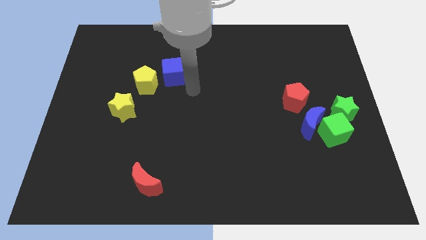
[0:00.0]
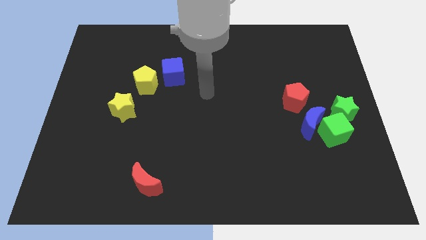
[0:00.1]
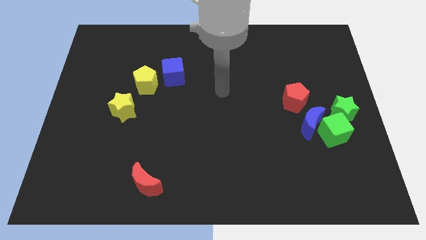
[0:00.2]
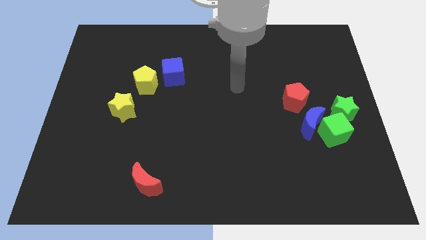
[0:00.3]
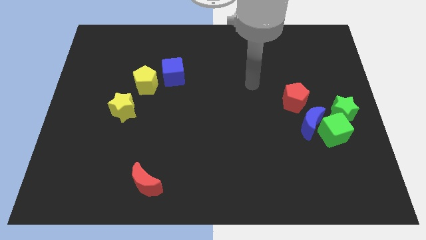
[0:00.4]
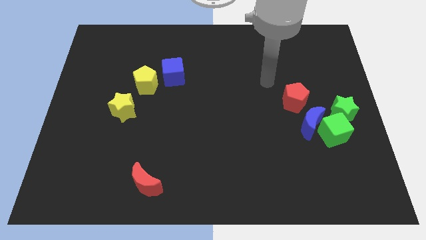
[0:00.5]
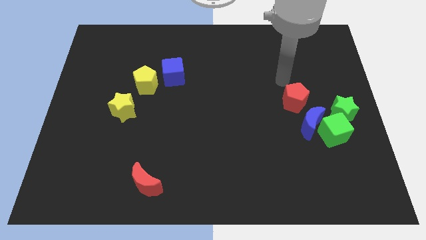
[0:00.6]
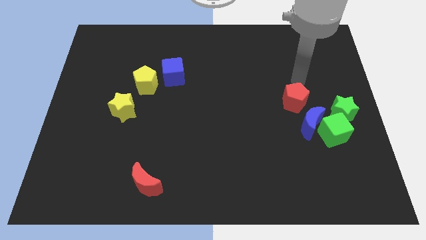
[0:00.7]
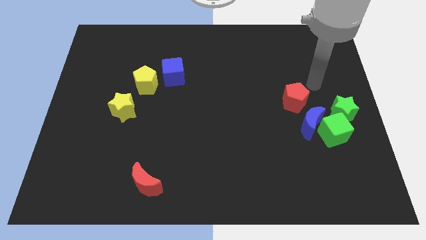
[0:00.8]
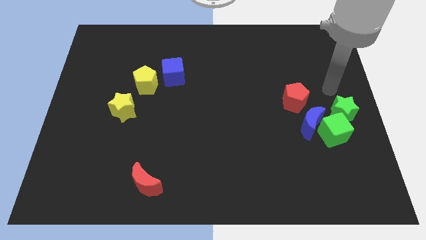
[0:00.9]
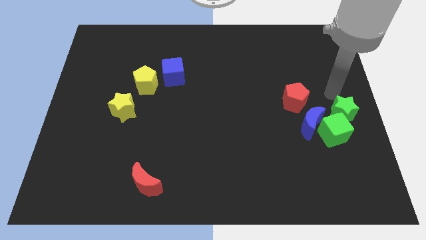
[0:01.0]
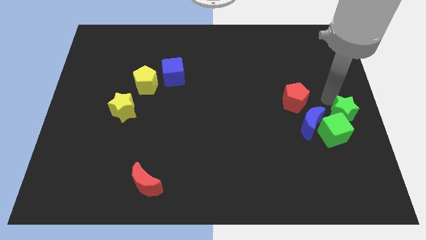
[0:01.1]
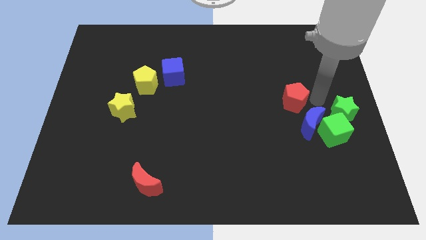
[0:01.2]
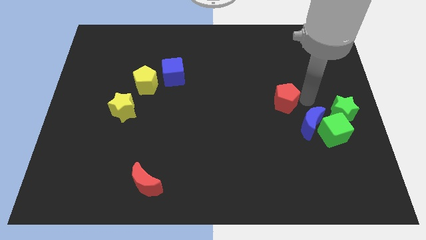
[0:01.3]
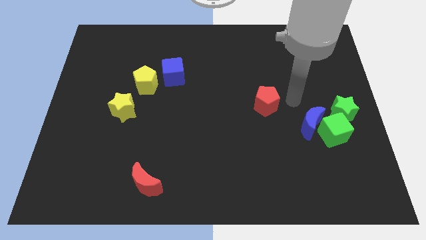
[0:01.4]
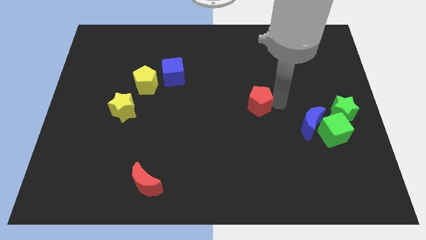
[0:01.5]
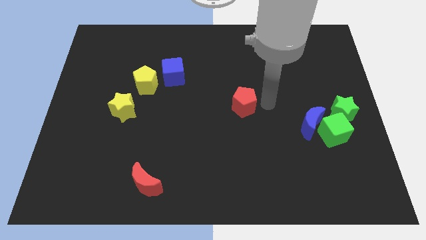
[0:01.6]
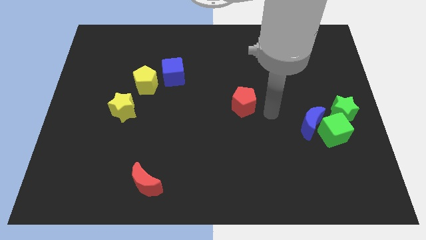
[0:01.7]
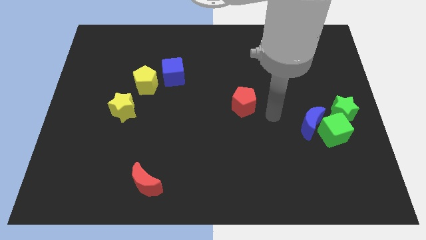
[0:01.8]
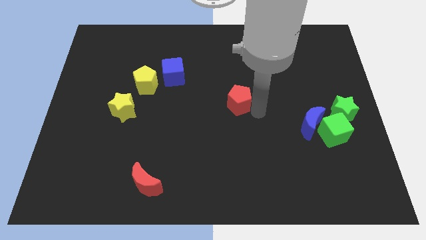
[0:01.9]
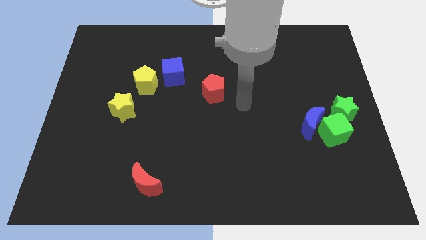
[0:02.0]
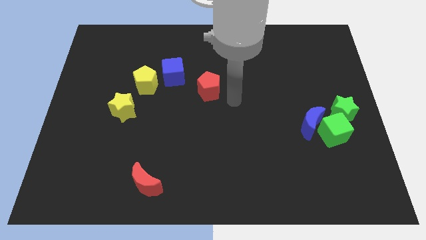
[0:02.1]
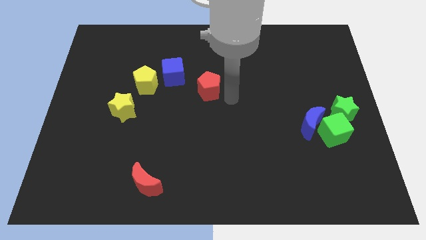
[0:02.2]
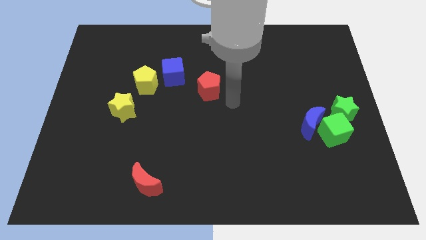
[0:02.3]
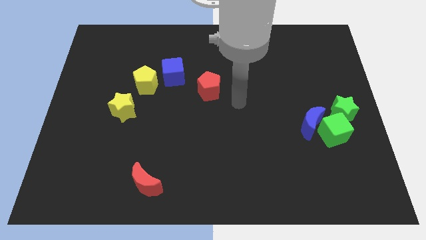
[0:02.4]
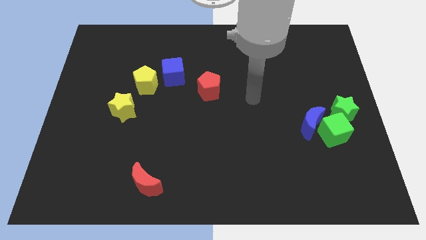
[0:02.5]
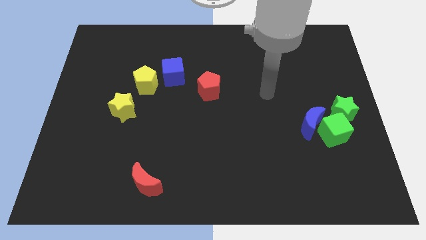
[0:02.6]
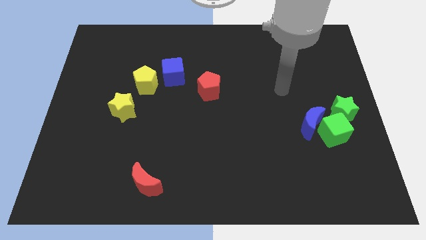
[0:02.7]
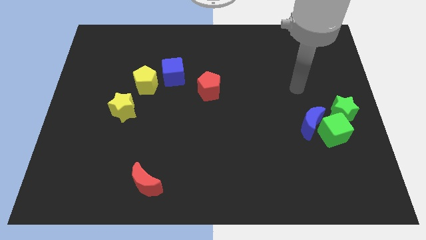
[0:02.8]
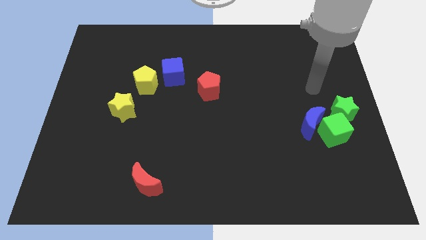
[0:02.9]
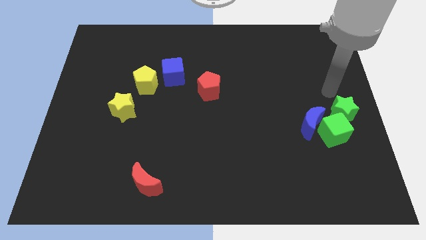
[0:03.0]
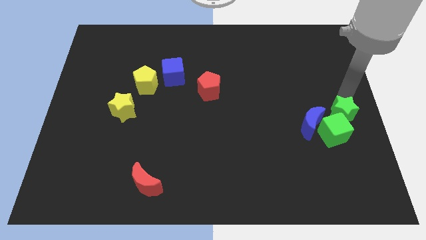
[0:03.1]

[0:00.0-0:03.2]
move the red pentagon towards the blue cube at the center of the board

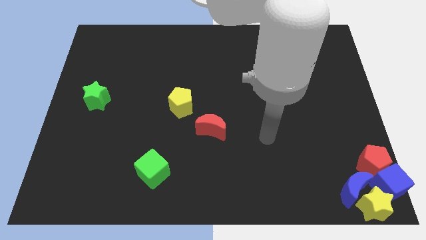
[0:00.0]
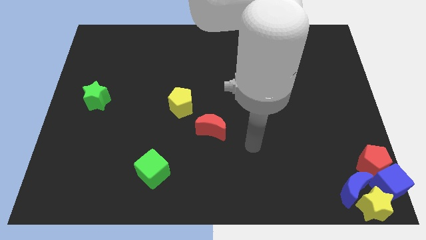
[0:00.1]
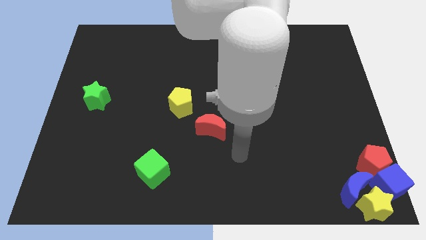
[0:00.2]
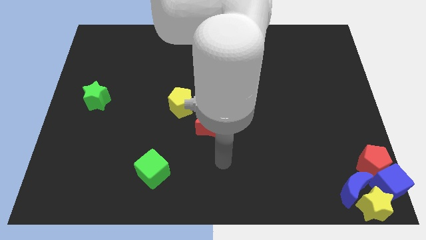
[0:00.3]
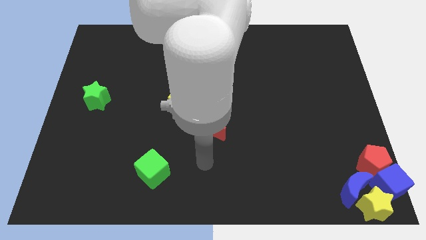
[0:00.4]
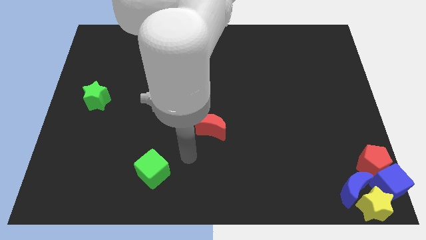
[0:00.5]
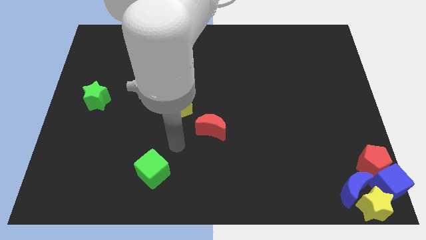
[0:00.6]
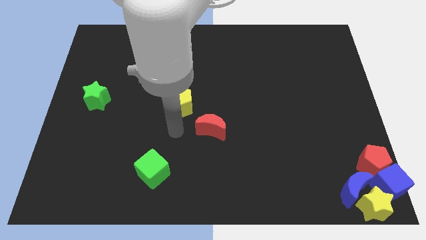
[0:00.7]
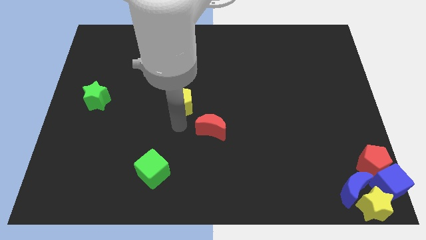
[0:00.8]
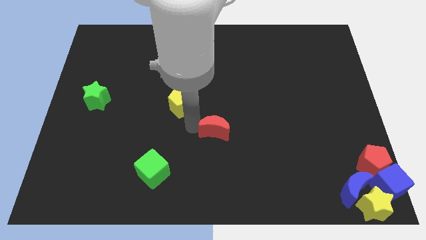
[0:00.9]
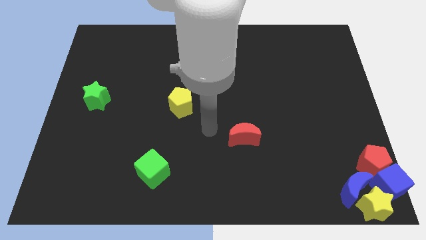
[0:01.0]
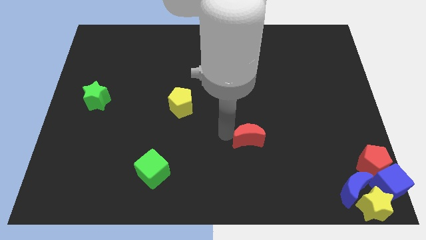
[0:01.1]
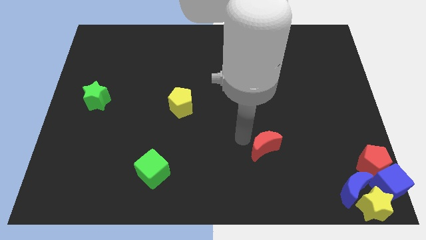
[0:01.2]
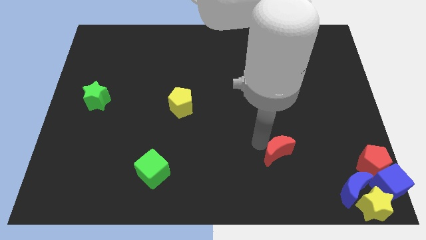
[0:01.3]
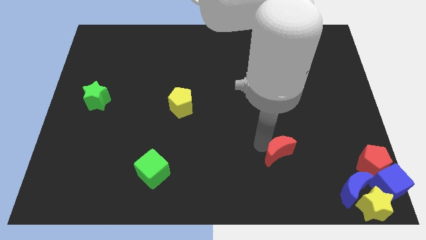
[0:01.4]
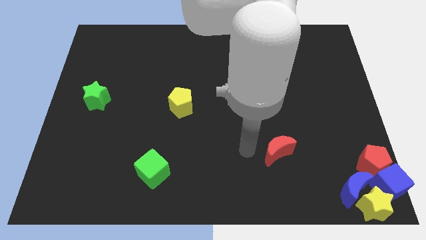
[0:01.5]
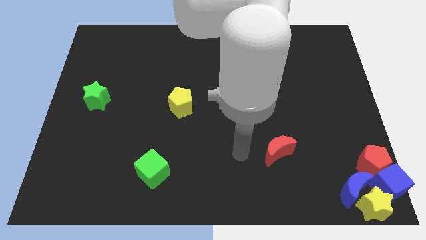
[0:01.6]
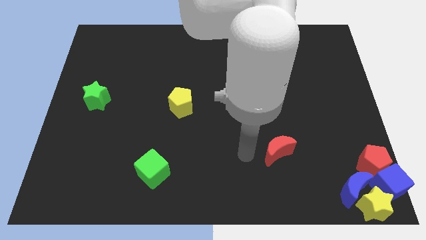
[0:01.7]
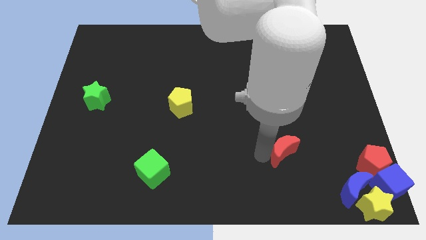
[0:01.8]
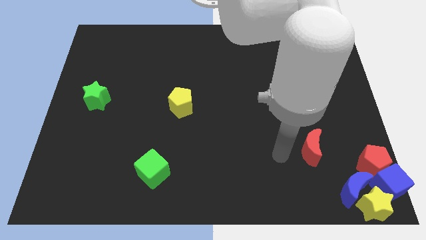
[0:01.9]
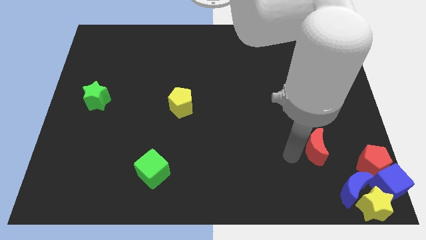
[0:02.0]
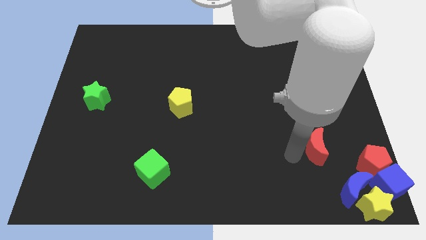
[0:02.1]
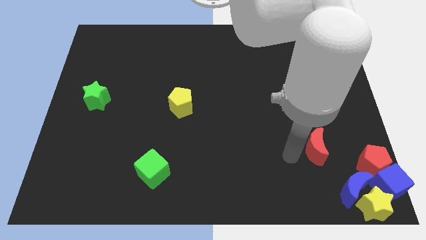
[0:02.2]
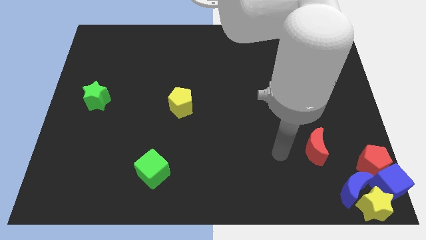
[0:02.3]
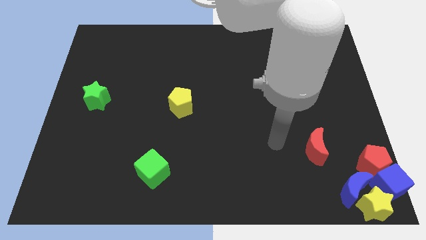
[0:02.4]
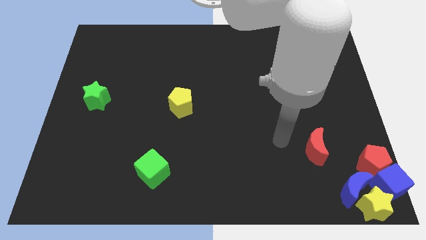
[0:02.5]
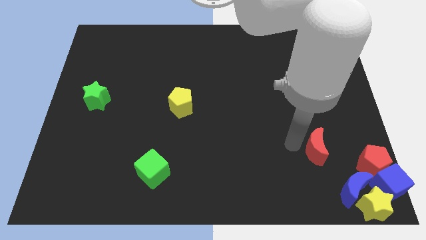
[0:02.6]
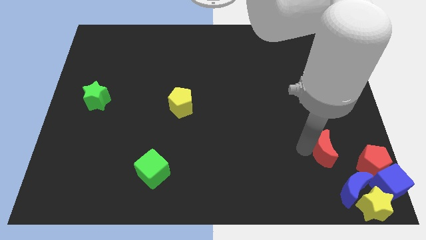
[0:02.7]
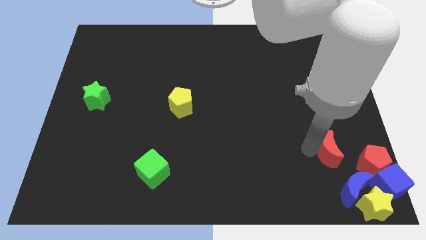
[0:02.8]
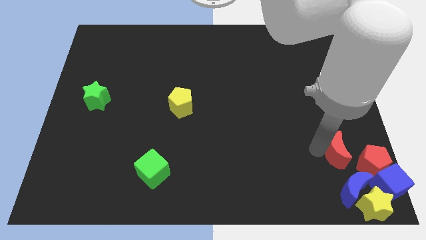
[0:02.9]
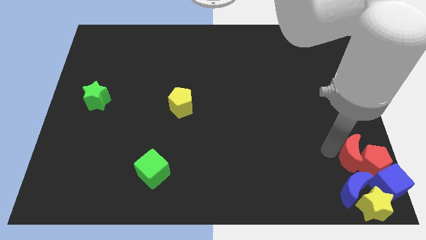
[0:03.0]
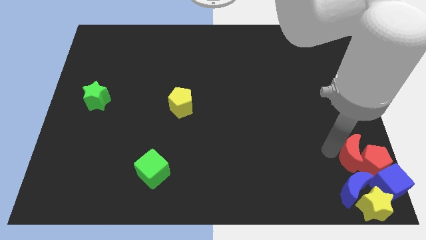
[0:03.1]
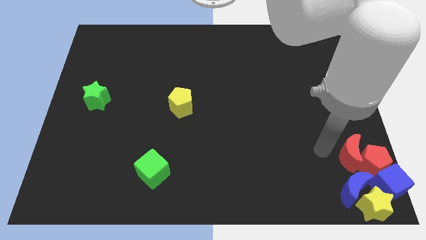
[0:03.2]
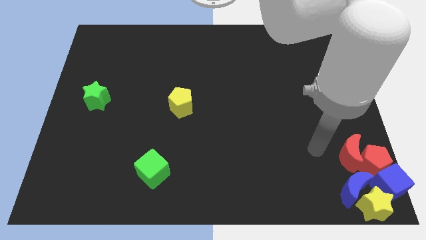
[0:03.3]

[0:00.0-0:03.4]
add the red moon into the red pentagon at the bottom right corner

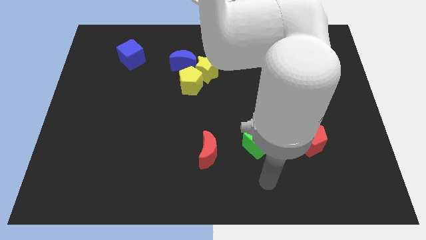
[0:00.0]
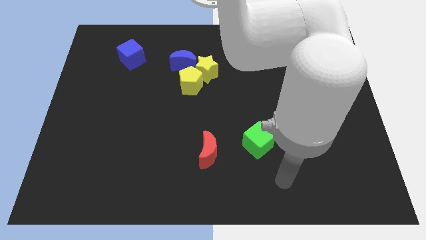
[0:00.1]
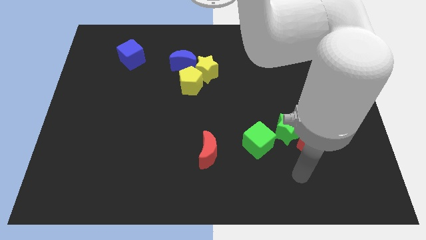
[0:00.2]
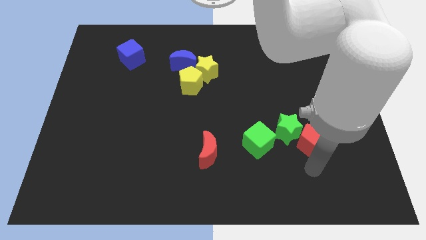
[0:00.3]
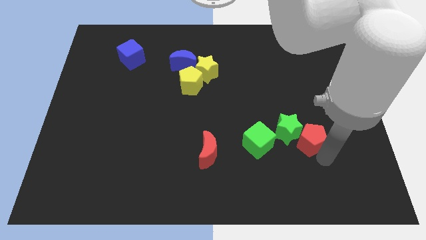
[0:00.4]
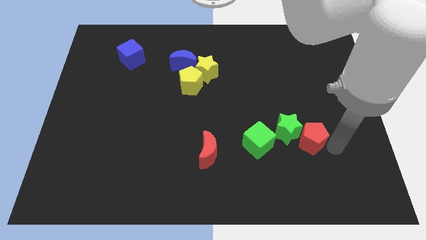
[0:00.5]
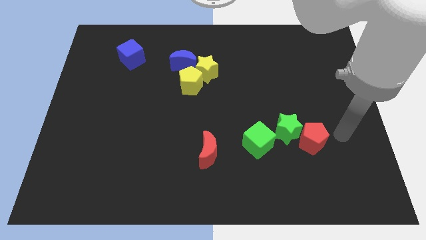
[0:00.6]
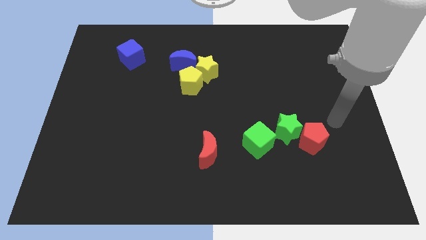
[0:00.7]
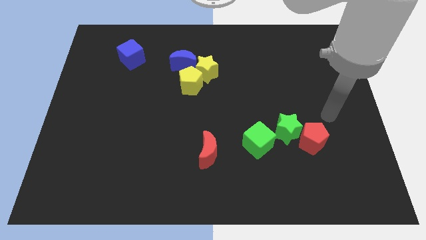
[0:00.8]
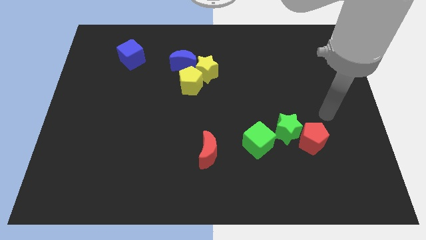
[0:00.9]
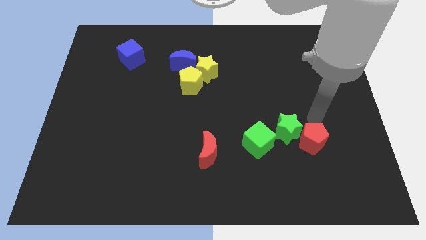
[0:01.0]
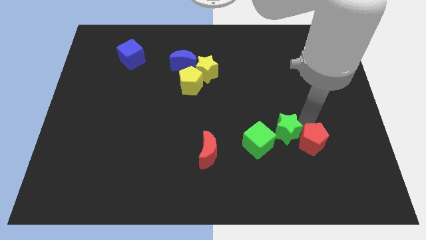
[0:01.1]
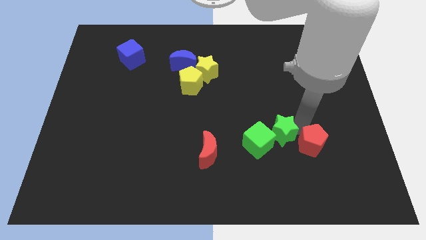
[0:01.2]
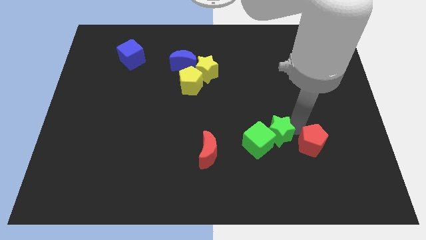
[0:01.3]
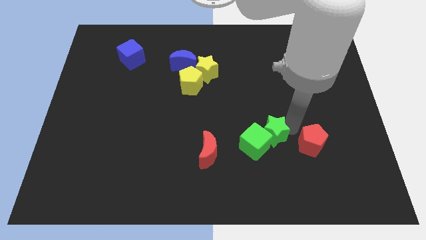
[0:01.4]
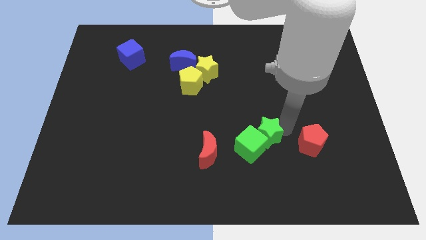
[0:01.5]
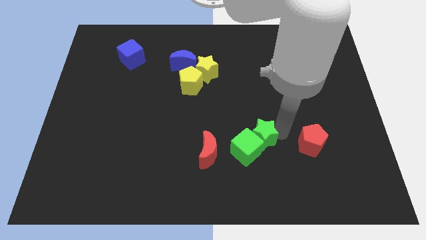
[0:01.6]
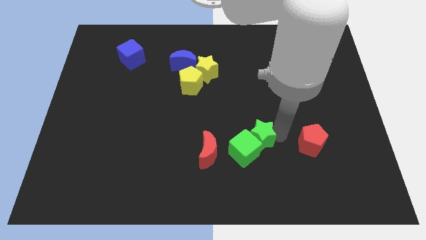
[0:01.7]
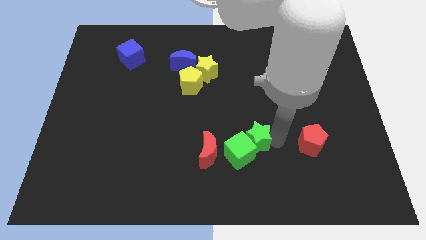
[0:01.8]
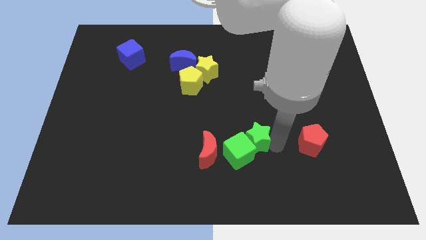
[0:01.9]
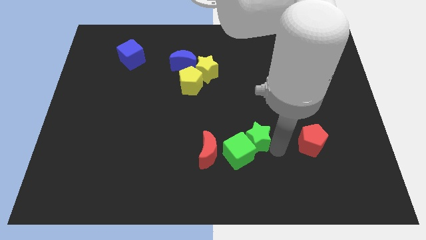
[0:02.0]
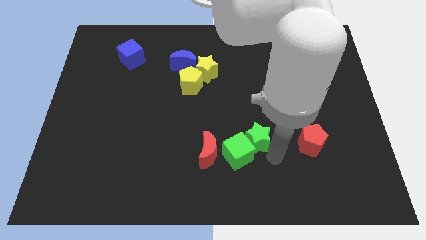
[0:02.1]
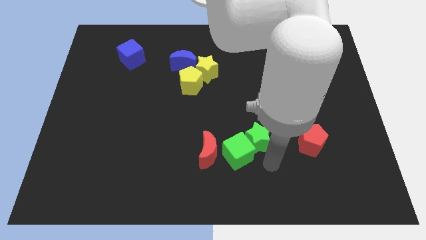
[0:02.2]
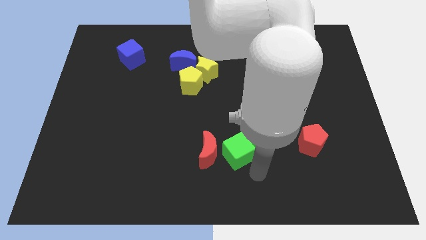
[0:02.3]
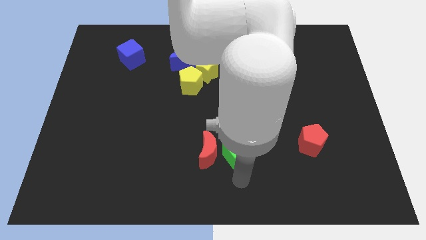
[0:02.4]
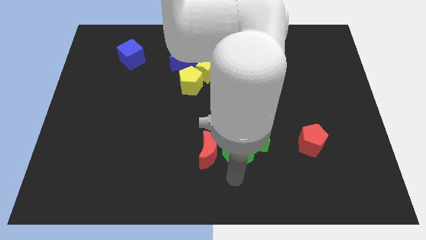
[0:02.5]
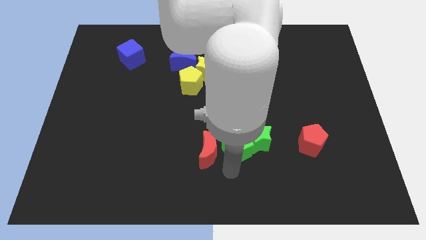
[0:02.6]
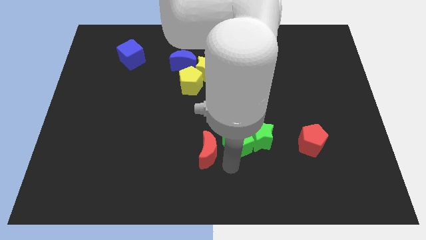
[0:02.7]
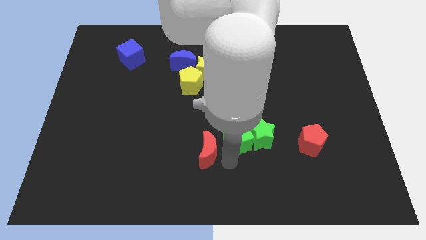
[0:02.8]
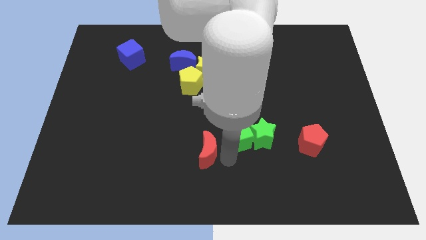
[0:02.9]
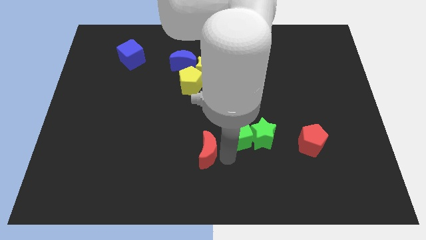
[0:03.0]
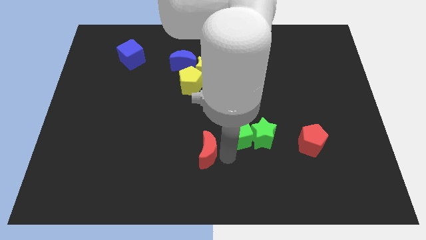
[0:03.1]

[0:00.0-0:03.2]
push the two green objects near the red crescent
